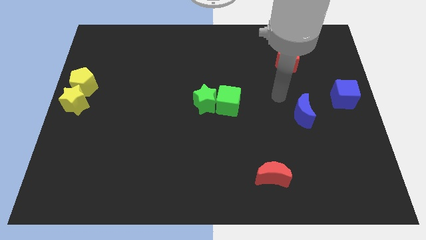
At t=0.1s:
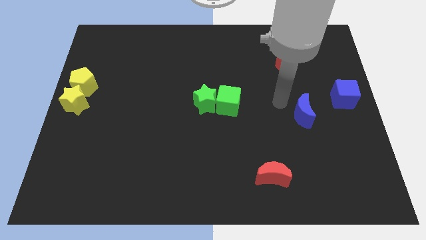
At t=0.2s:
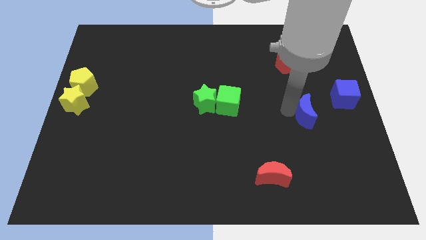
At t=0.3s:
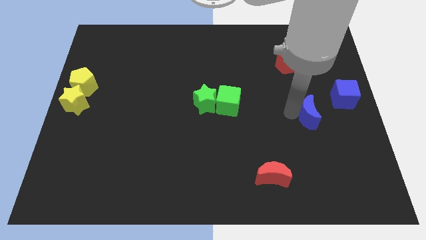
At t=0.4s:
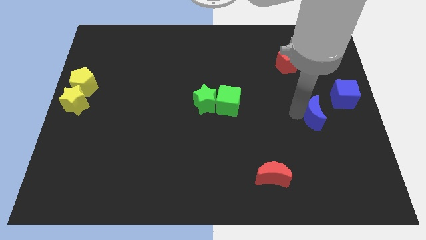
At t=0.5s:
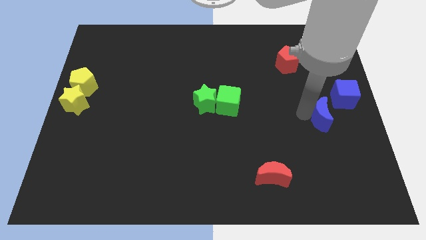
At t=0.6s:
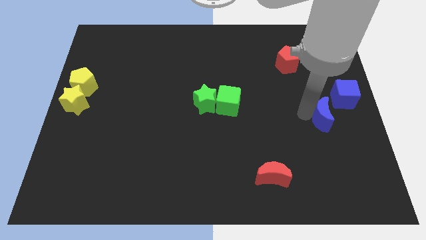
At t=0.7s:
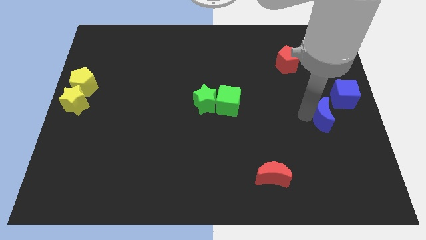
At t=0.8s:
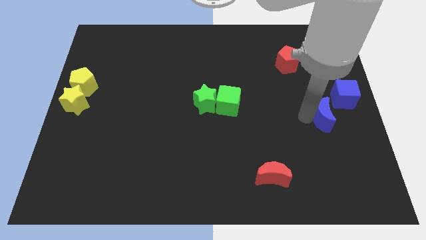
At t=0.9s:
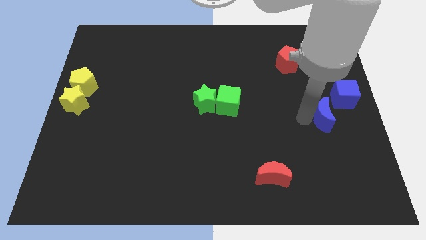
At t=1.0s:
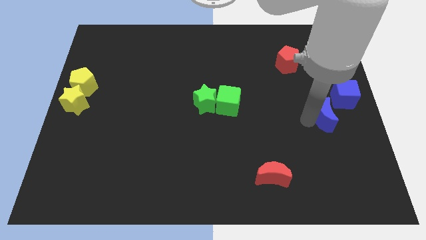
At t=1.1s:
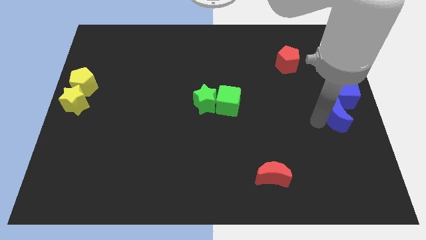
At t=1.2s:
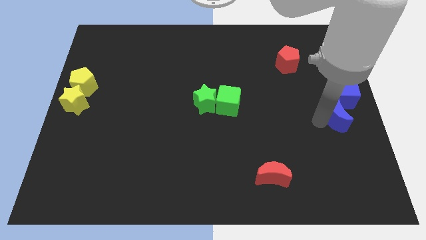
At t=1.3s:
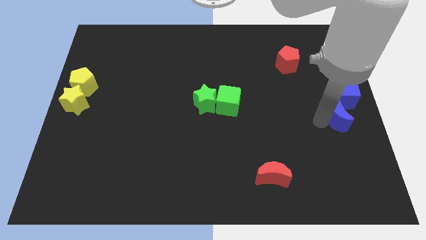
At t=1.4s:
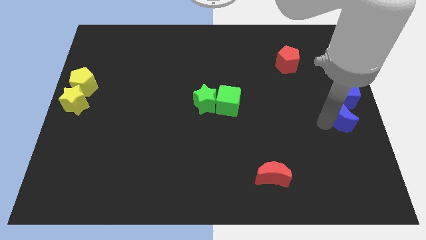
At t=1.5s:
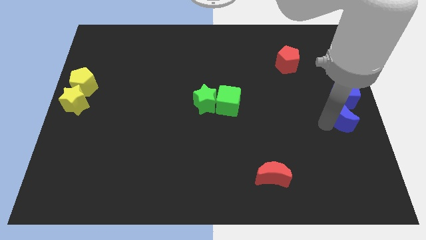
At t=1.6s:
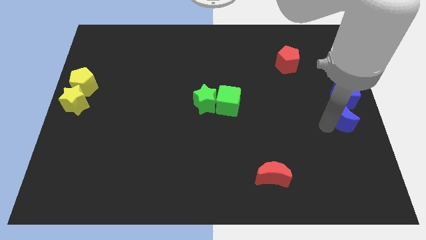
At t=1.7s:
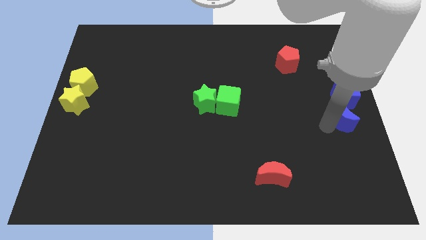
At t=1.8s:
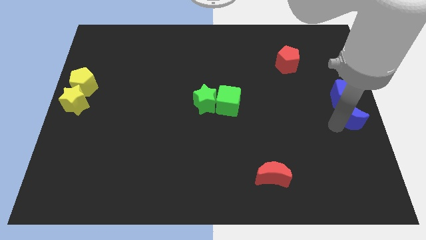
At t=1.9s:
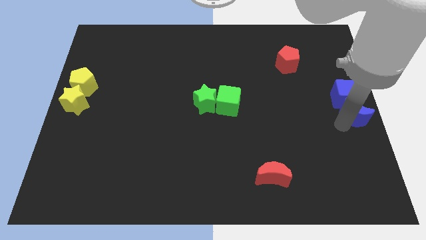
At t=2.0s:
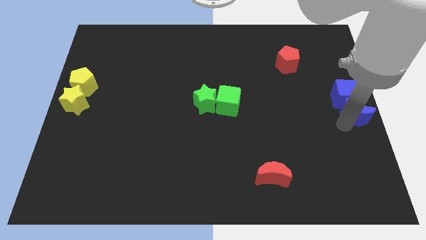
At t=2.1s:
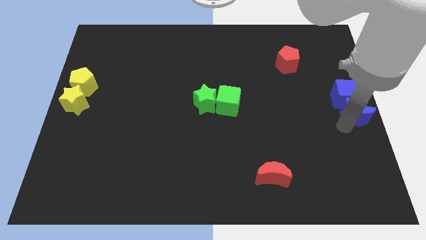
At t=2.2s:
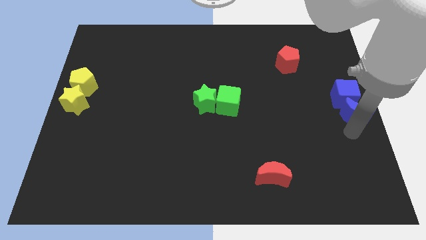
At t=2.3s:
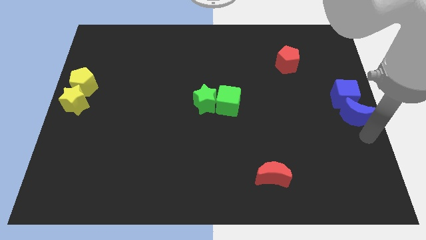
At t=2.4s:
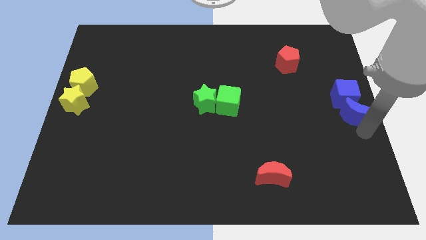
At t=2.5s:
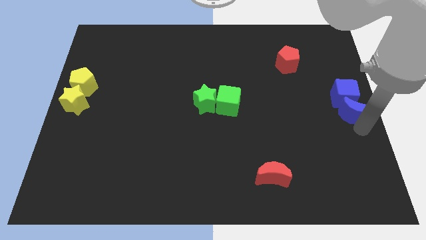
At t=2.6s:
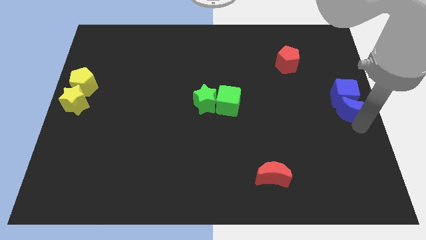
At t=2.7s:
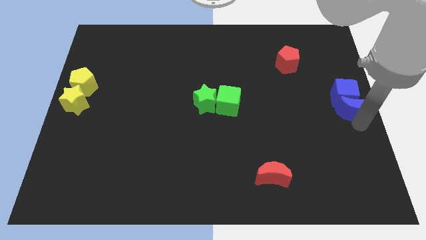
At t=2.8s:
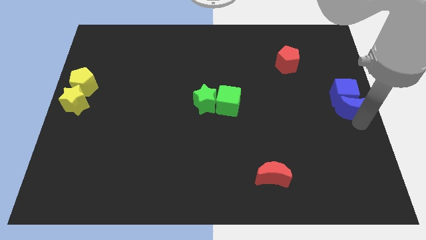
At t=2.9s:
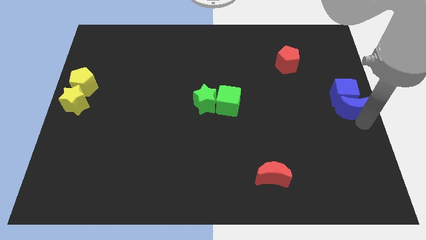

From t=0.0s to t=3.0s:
place the blue crescent below the blue cube

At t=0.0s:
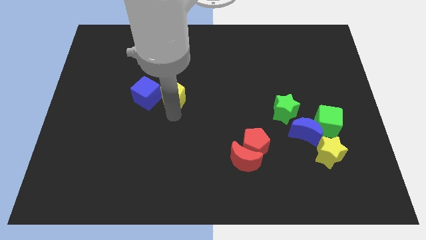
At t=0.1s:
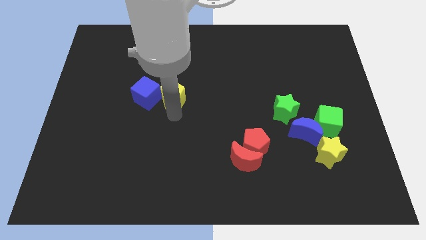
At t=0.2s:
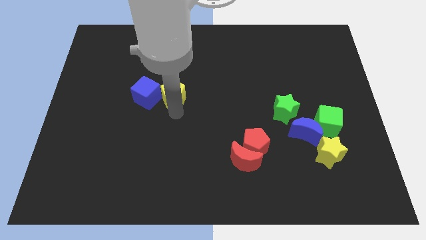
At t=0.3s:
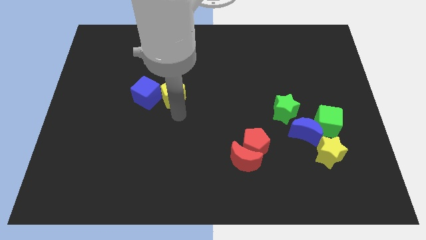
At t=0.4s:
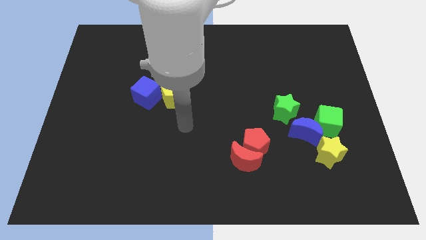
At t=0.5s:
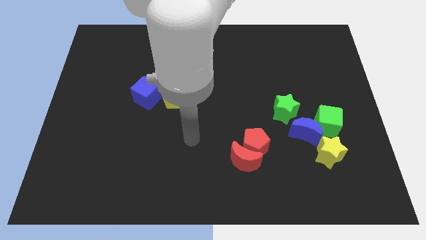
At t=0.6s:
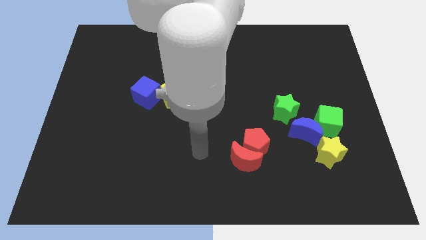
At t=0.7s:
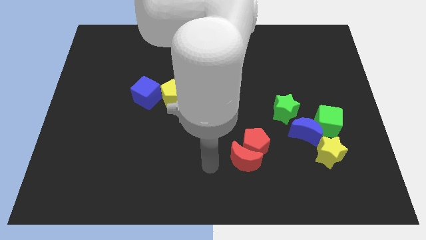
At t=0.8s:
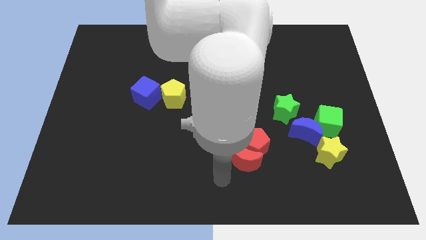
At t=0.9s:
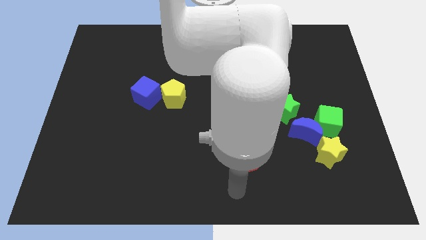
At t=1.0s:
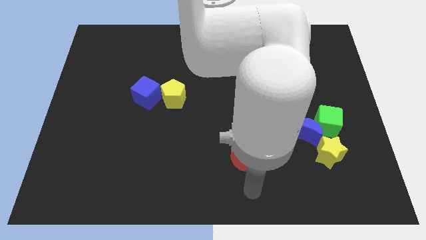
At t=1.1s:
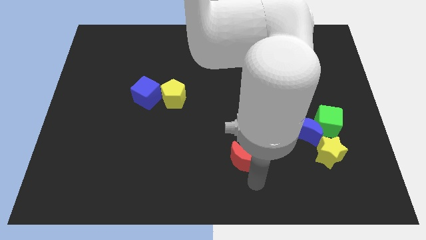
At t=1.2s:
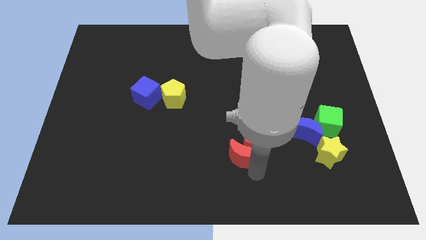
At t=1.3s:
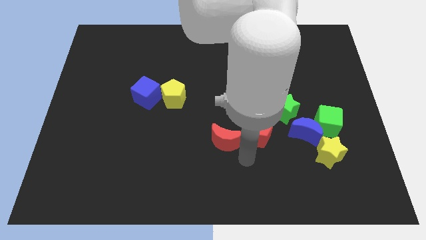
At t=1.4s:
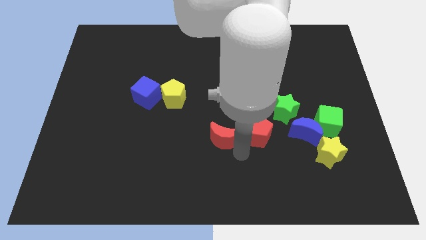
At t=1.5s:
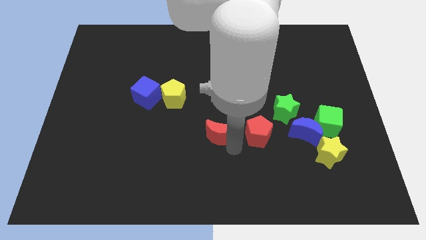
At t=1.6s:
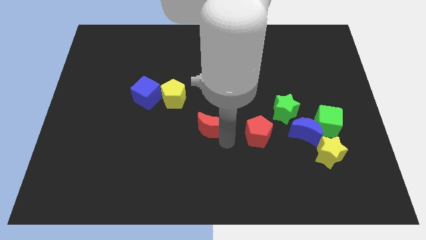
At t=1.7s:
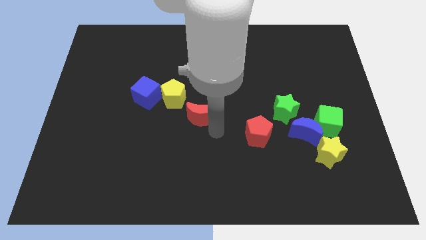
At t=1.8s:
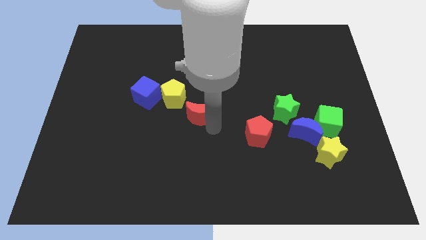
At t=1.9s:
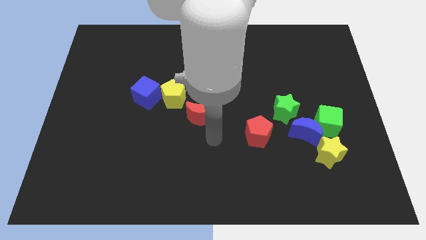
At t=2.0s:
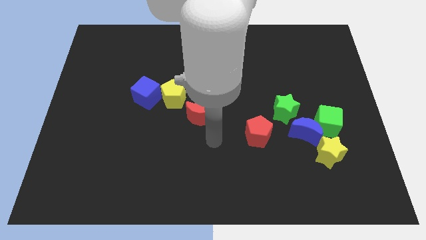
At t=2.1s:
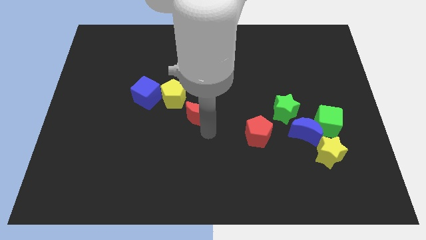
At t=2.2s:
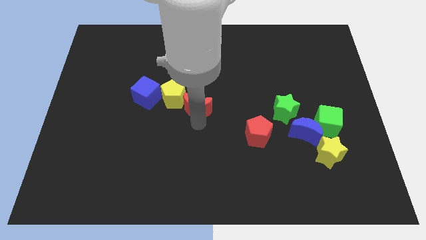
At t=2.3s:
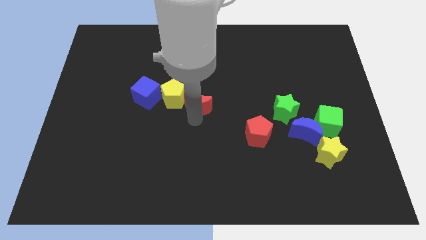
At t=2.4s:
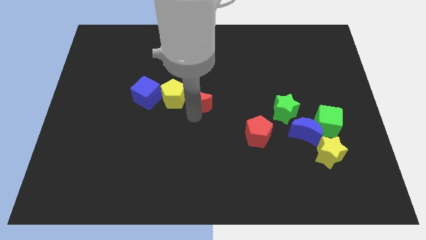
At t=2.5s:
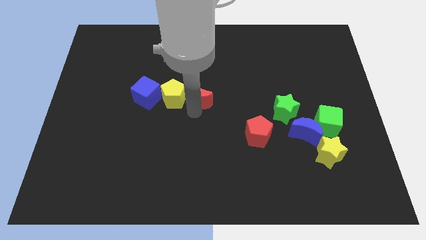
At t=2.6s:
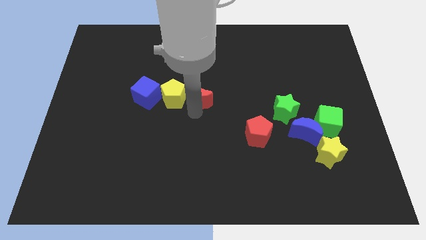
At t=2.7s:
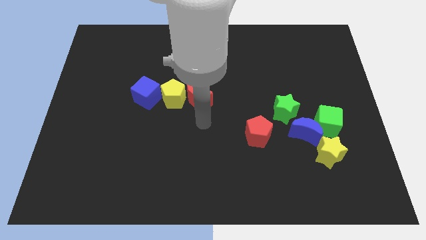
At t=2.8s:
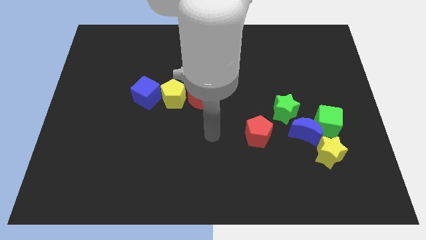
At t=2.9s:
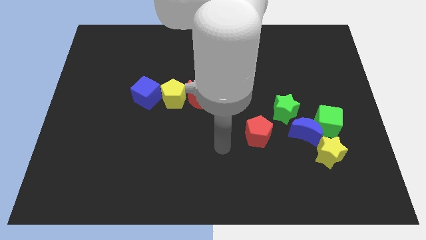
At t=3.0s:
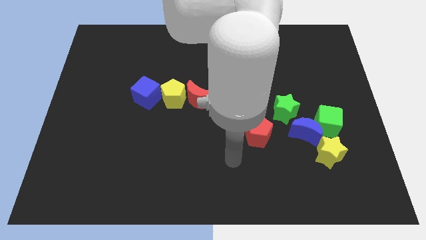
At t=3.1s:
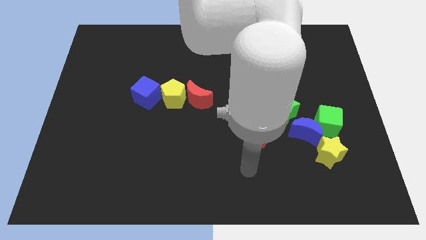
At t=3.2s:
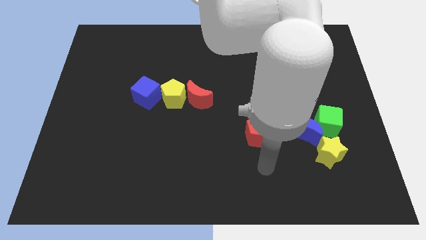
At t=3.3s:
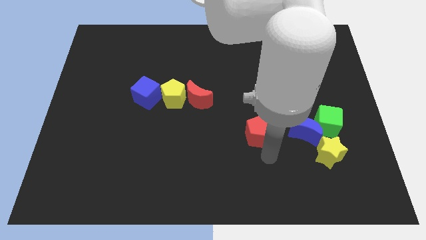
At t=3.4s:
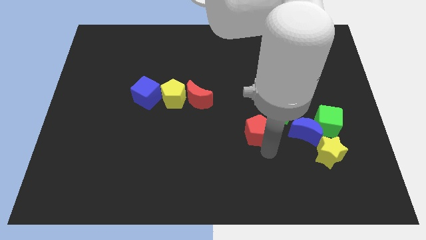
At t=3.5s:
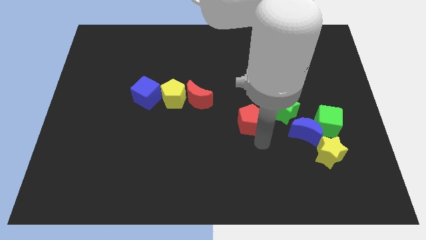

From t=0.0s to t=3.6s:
push the red crescent to the right of the yellow pentagon

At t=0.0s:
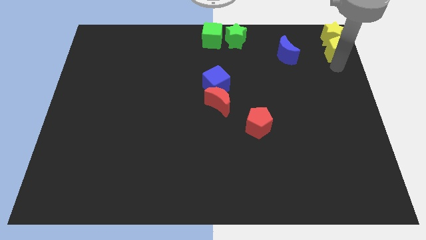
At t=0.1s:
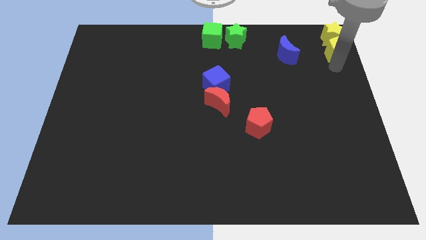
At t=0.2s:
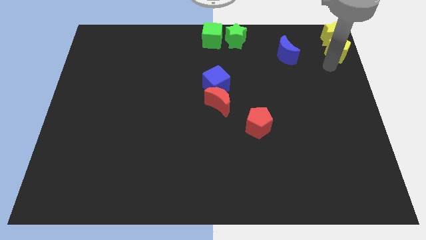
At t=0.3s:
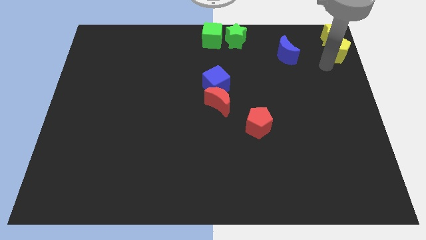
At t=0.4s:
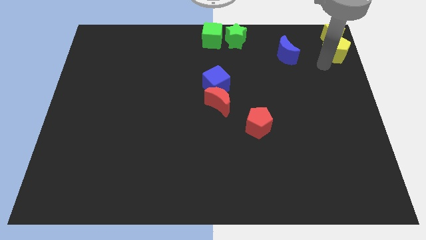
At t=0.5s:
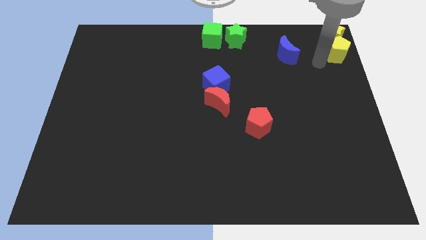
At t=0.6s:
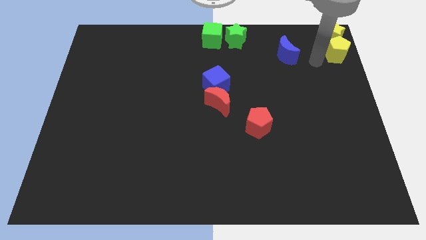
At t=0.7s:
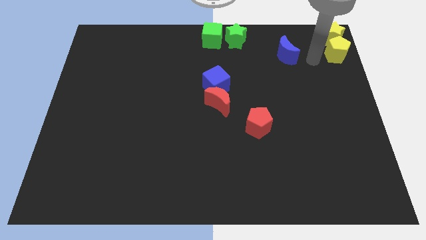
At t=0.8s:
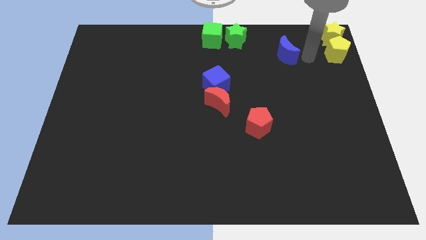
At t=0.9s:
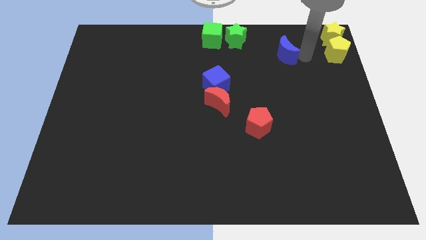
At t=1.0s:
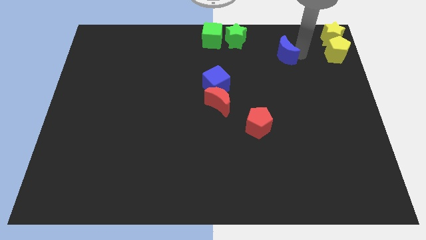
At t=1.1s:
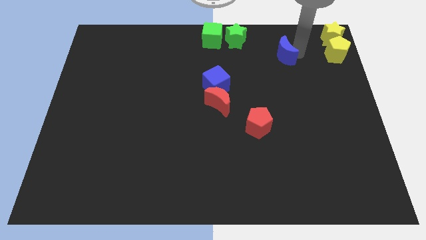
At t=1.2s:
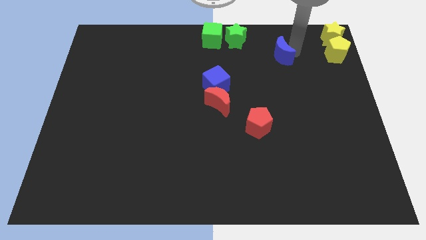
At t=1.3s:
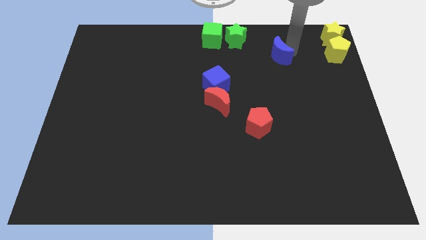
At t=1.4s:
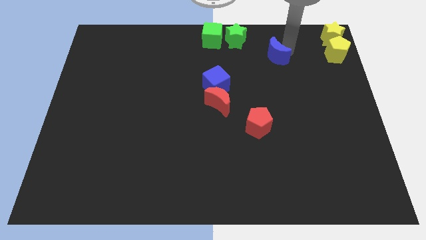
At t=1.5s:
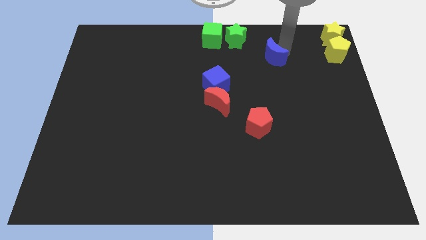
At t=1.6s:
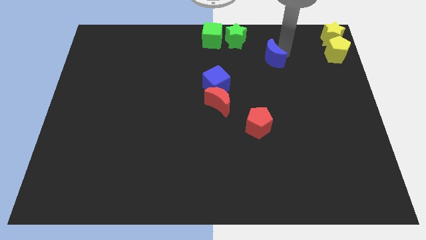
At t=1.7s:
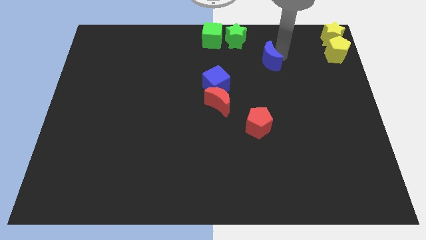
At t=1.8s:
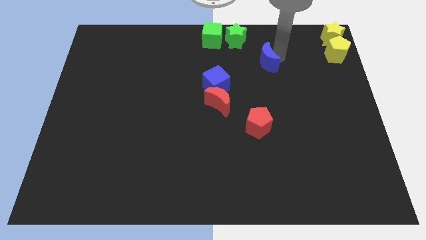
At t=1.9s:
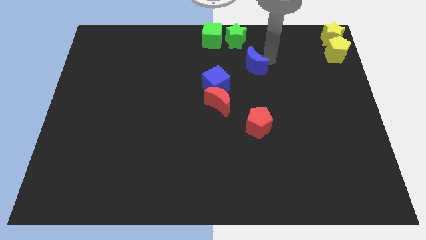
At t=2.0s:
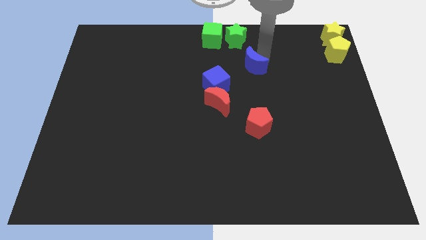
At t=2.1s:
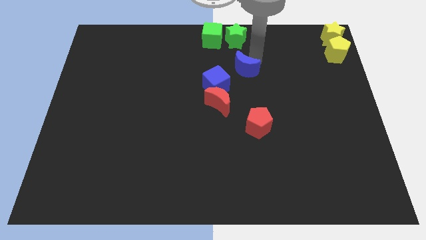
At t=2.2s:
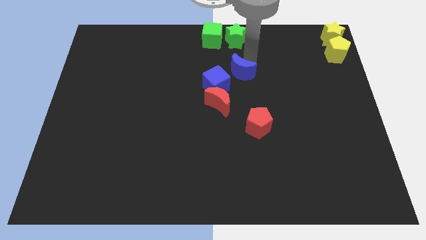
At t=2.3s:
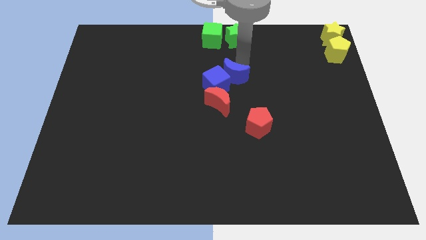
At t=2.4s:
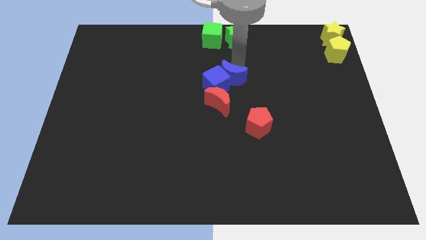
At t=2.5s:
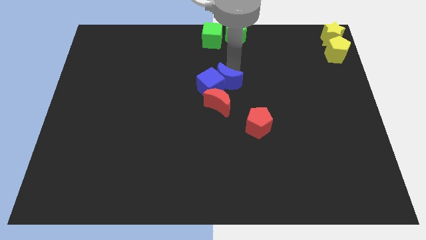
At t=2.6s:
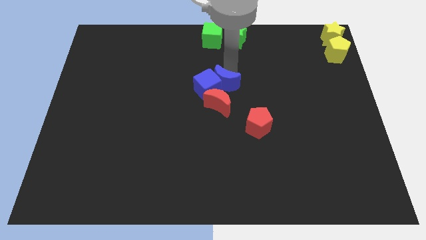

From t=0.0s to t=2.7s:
move the blue moon into the blue cube
